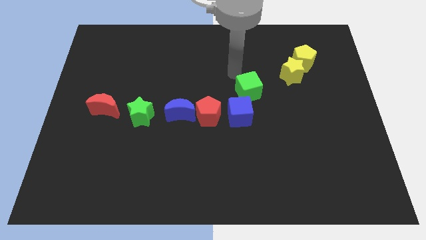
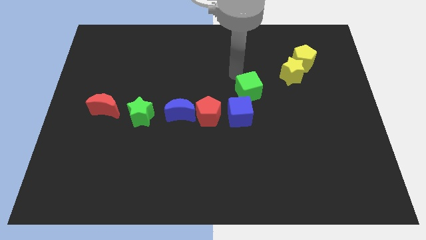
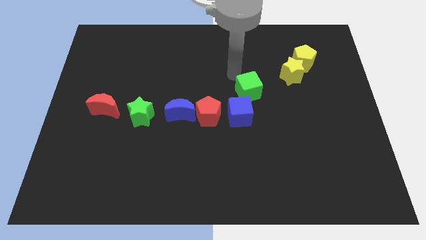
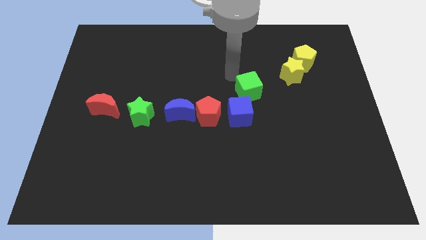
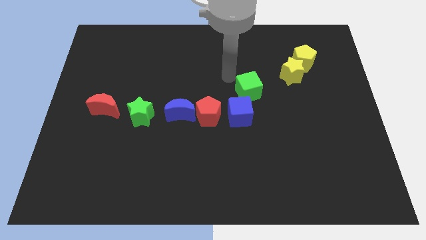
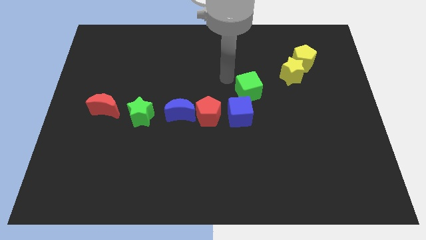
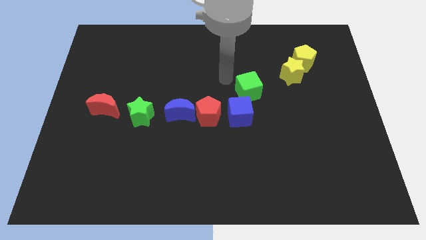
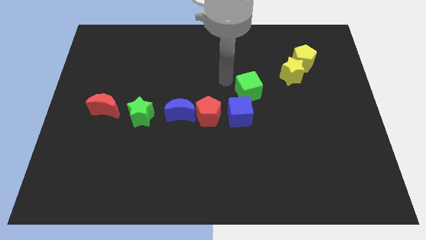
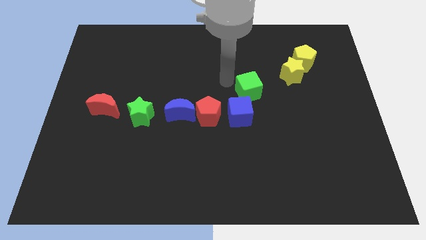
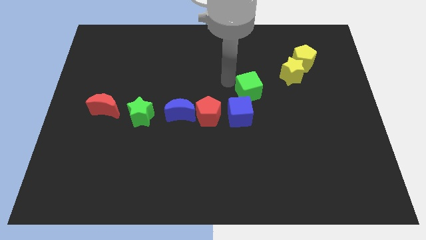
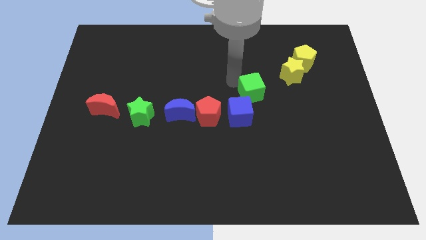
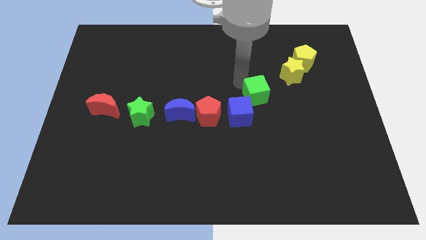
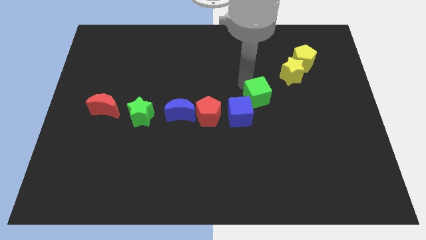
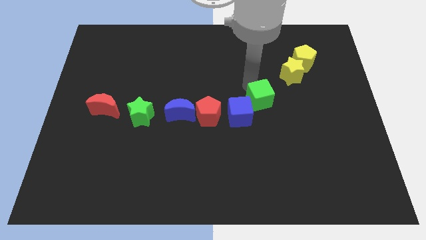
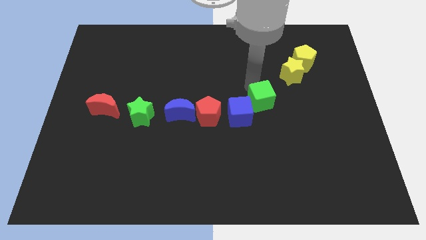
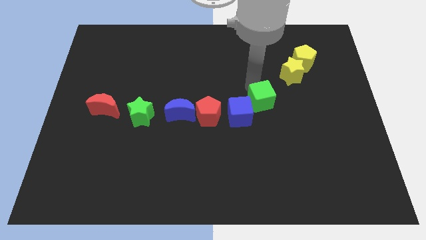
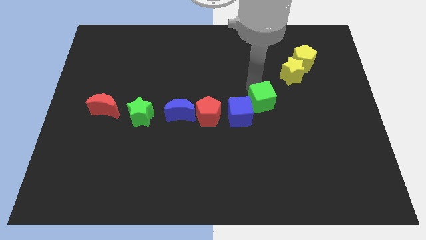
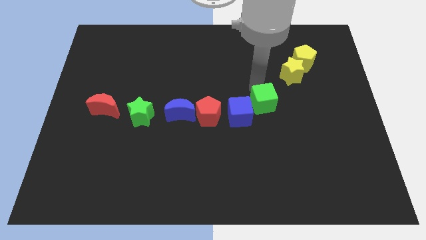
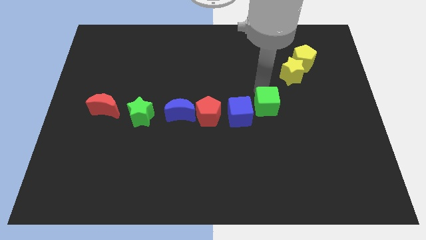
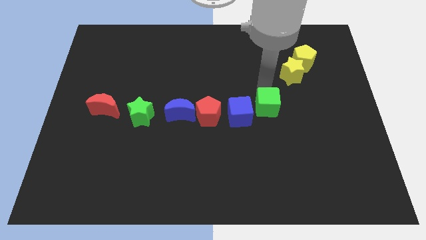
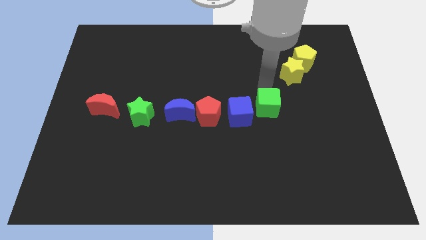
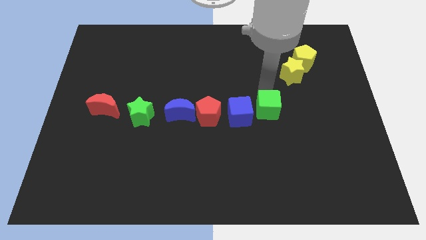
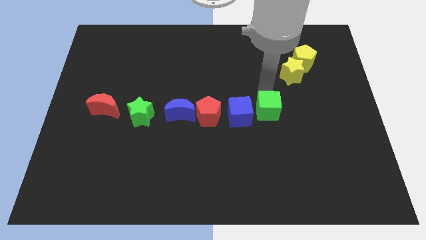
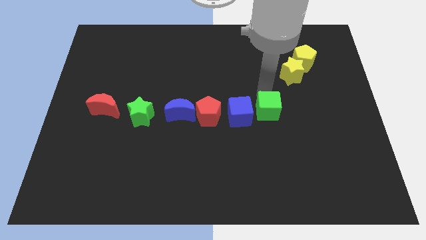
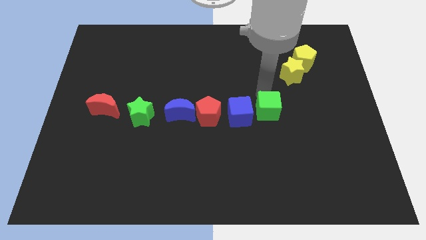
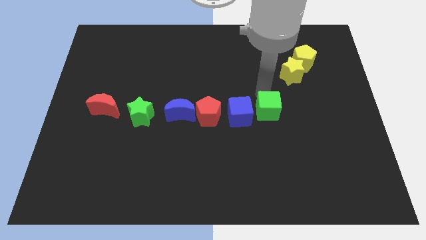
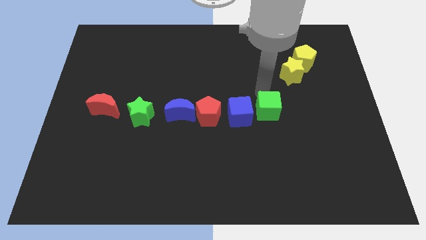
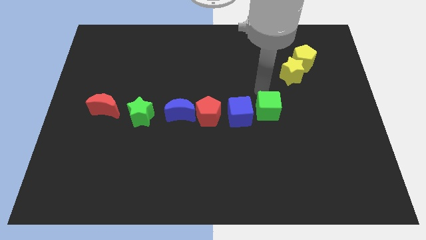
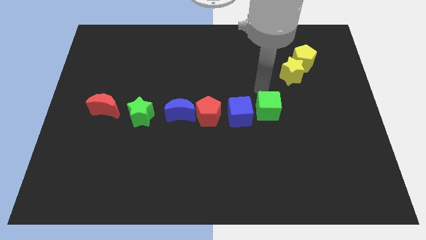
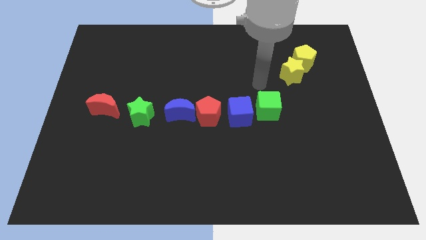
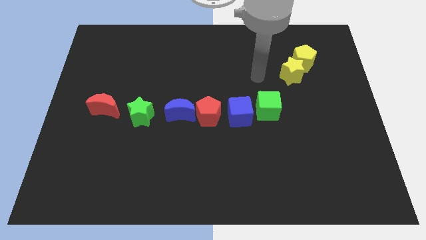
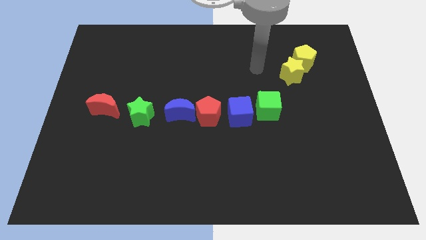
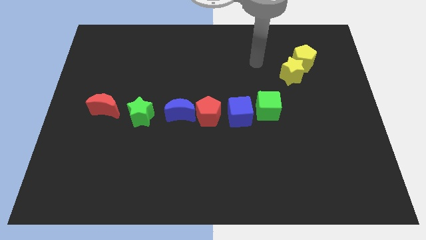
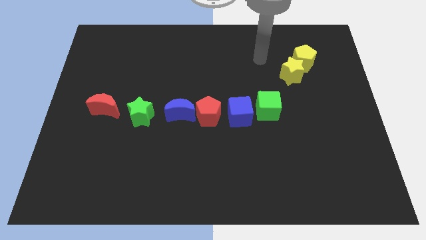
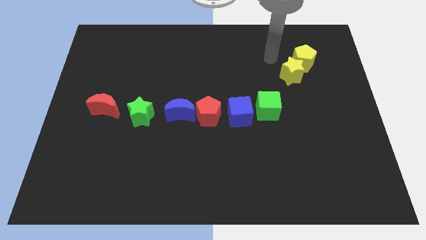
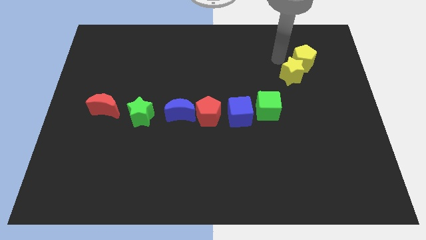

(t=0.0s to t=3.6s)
move the green cube to the right side of the blue cube

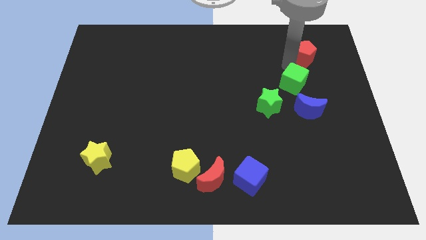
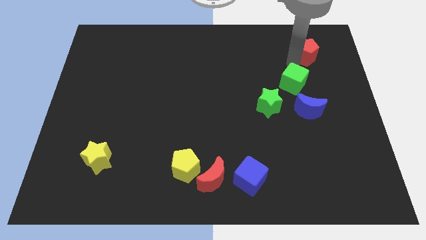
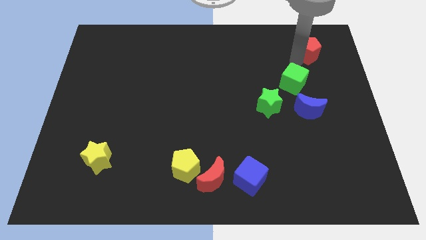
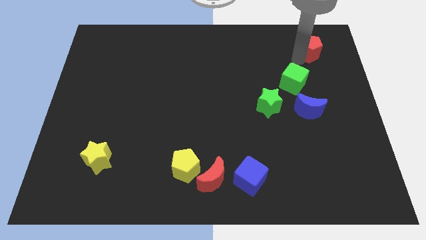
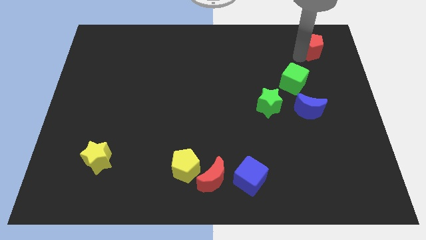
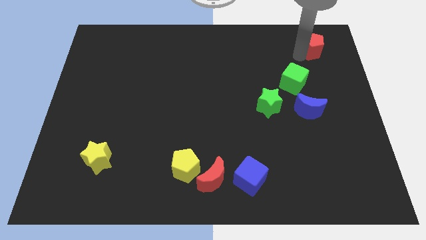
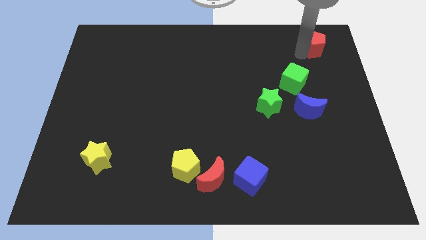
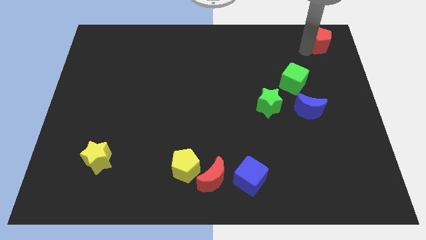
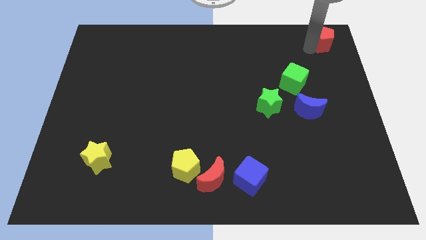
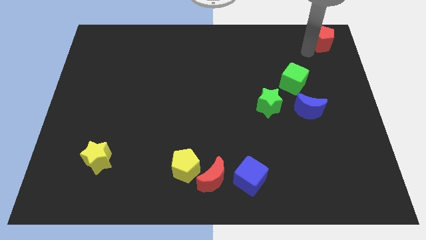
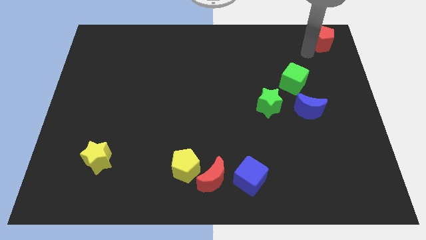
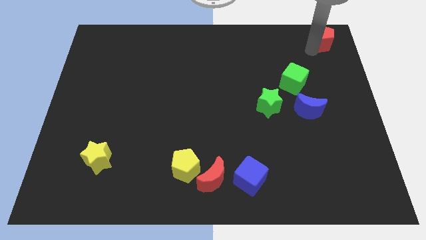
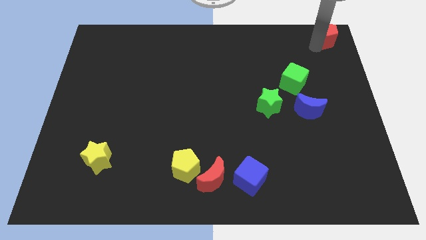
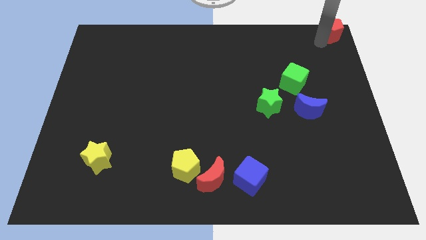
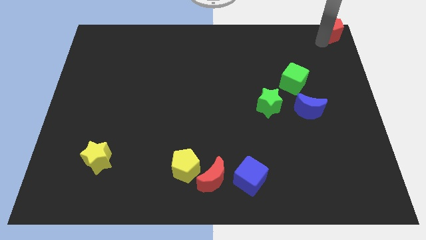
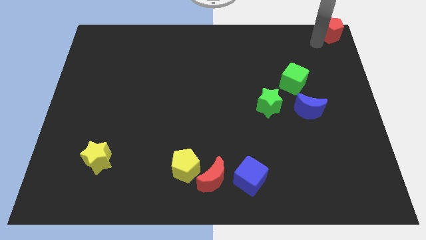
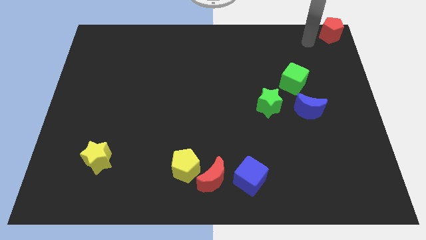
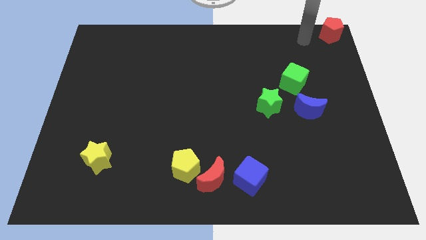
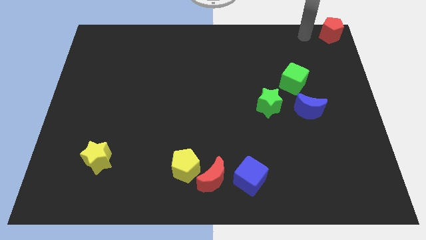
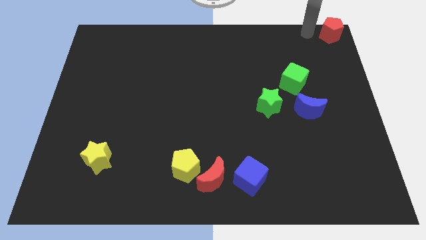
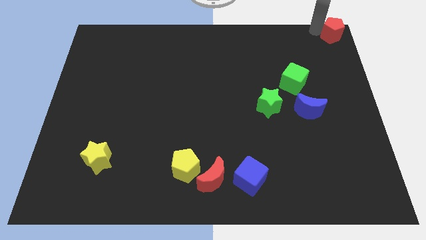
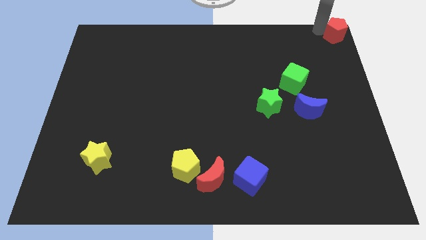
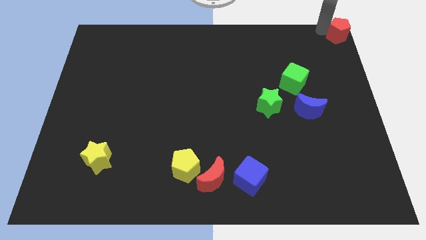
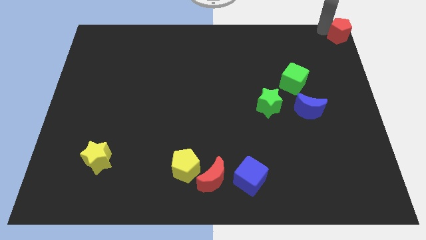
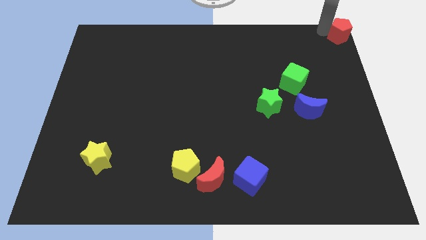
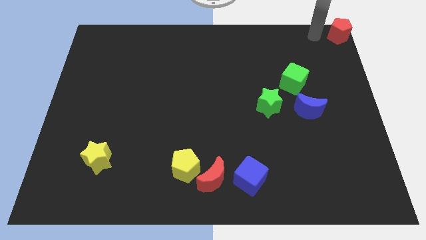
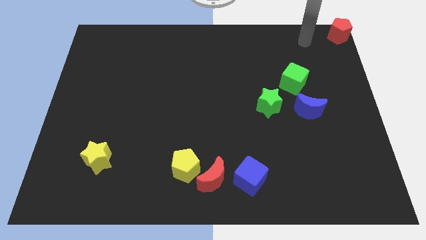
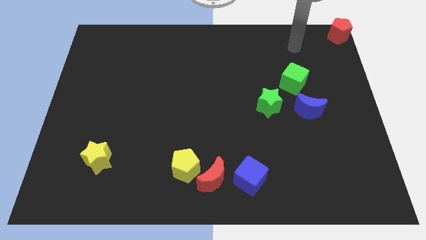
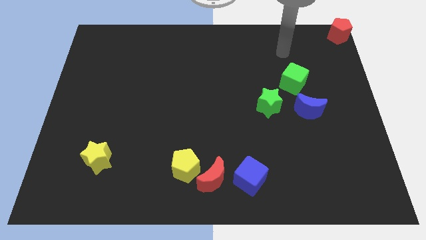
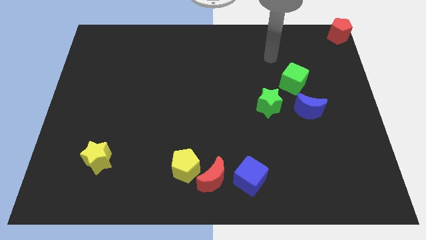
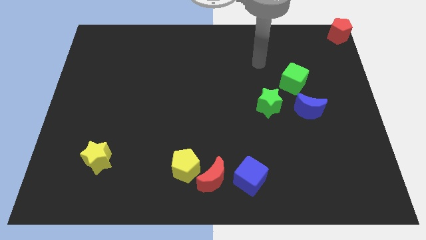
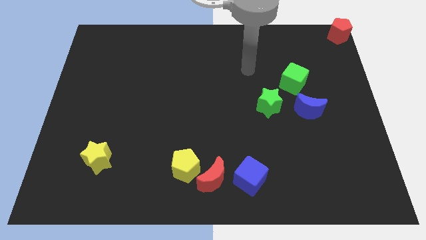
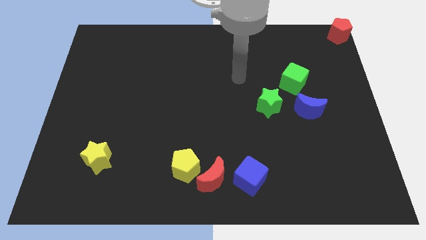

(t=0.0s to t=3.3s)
place the red pentagon at the top right of the board

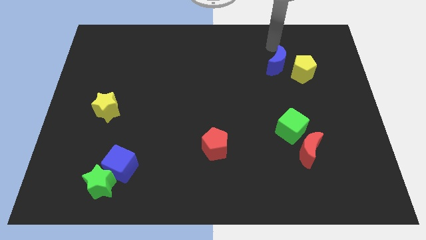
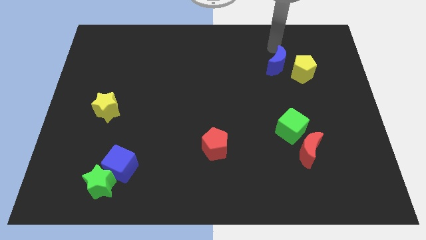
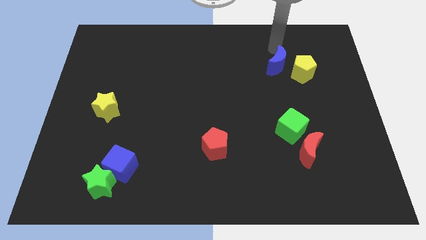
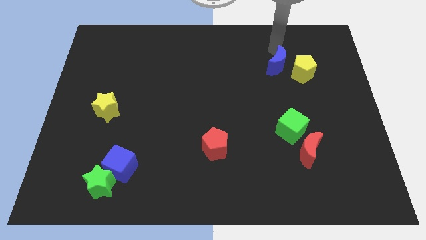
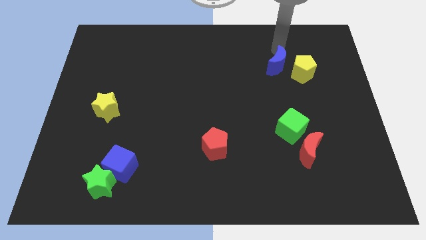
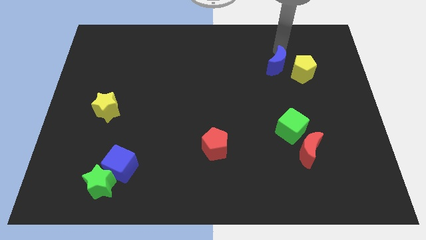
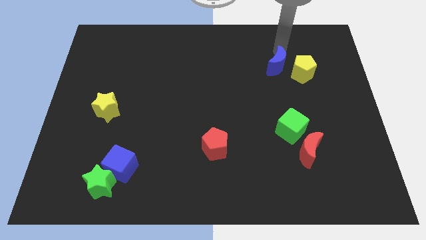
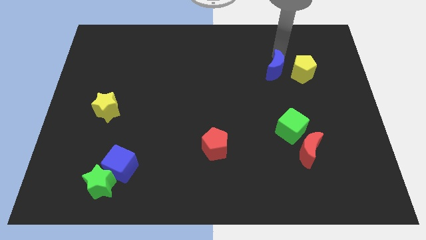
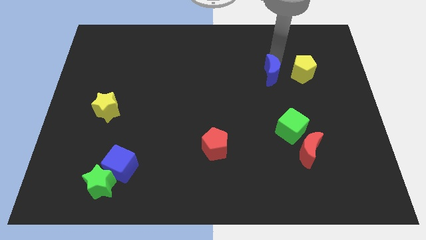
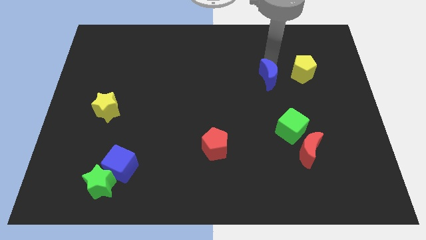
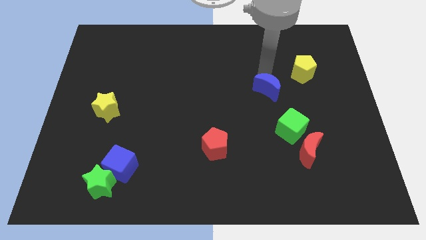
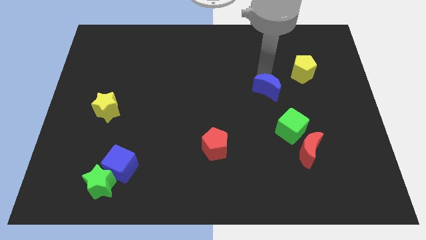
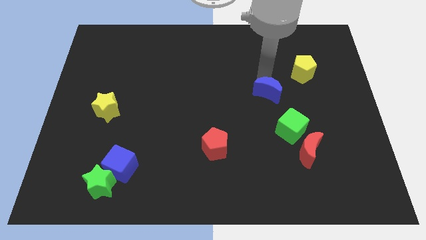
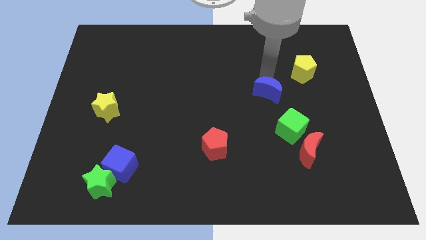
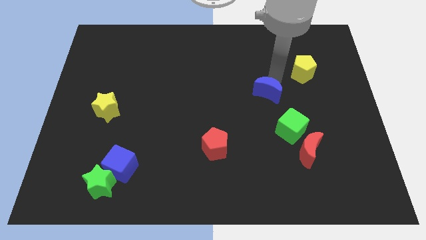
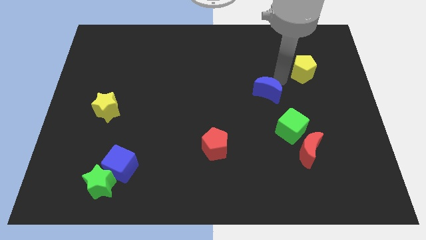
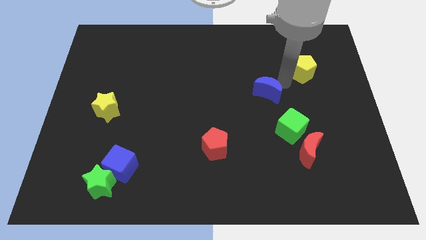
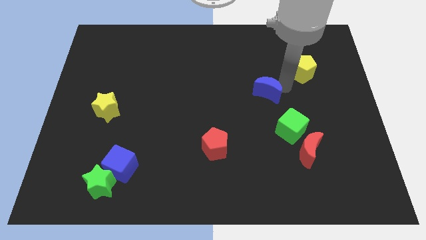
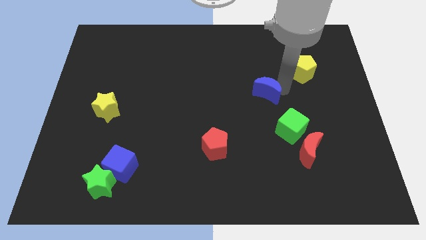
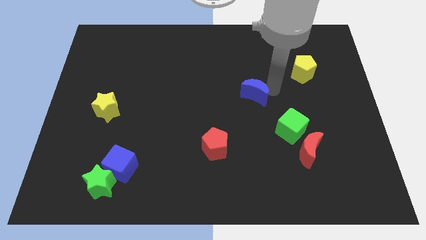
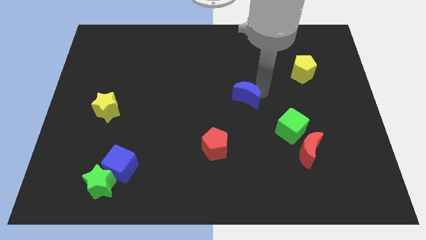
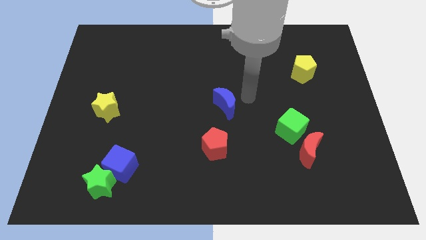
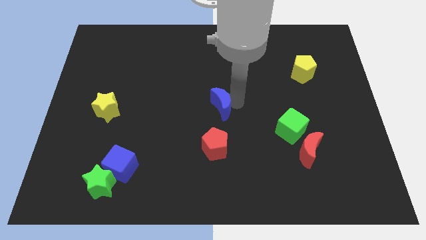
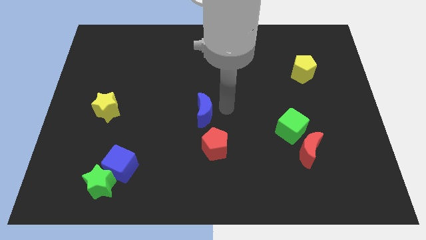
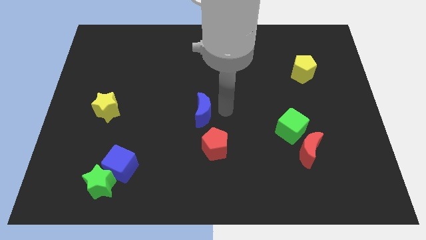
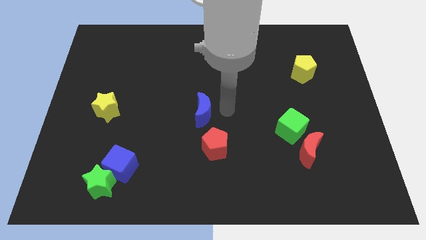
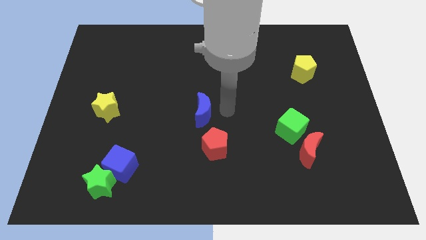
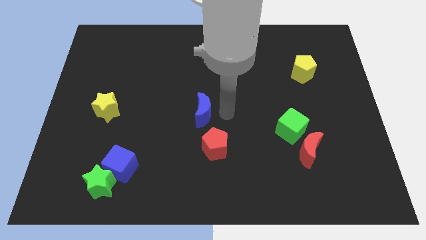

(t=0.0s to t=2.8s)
move the blue moon left avove the red pentagon
